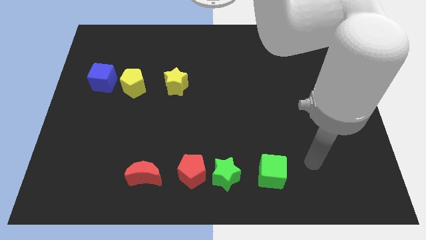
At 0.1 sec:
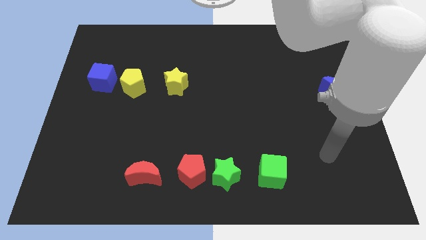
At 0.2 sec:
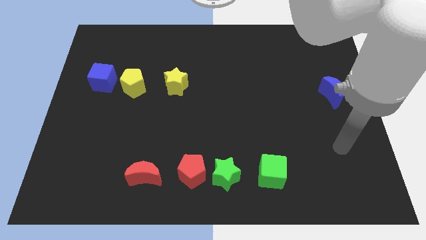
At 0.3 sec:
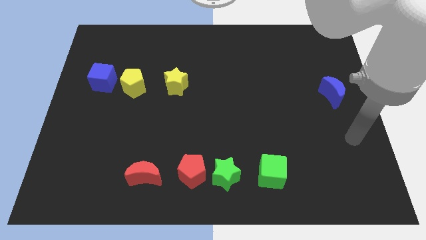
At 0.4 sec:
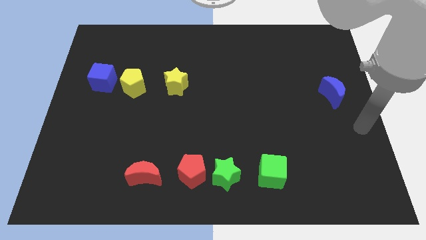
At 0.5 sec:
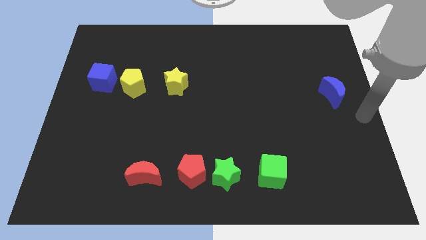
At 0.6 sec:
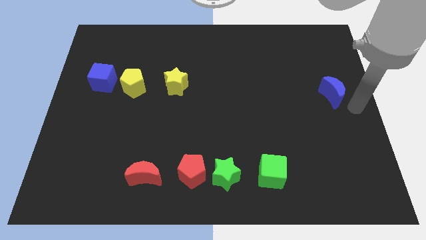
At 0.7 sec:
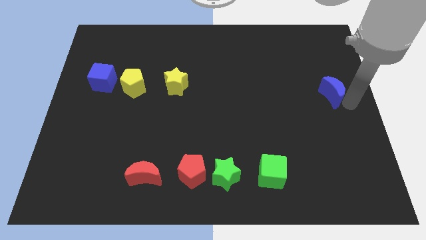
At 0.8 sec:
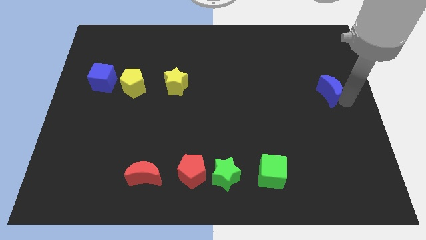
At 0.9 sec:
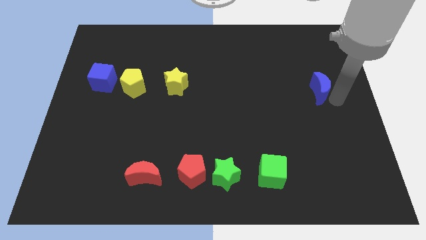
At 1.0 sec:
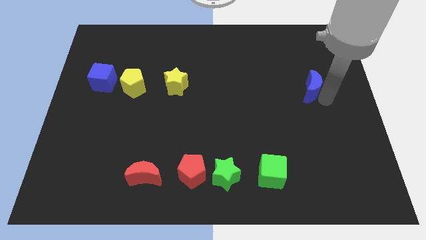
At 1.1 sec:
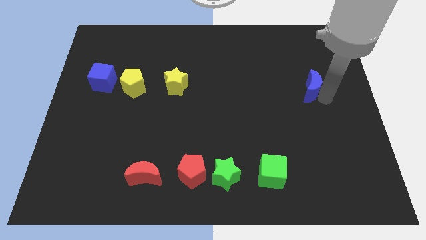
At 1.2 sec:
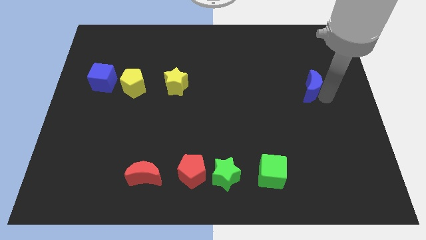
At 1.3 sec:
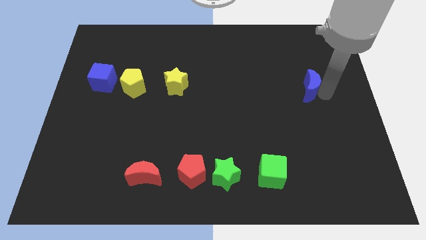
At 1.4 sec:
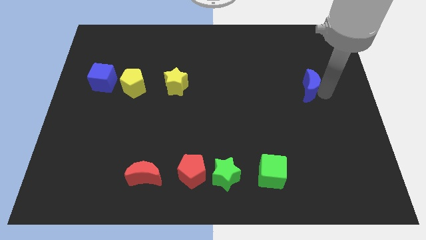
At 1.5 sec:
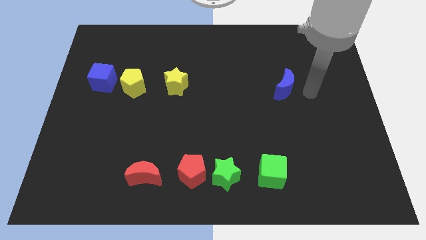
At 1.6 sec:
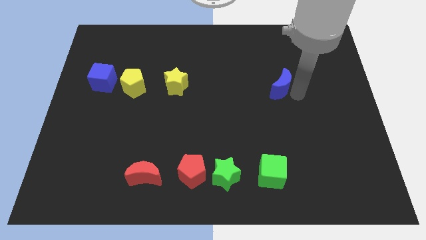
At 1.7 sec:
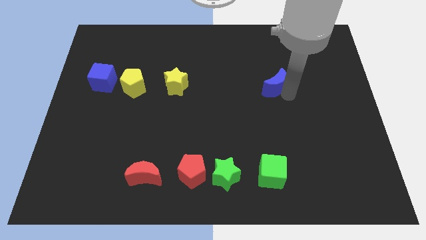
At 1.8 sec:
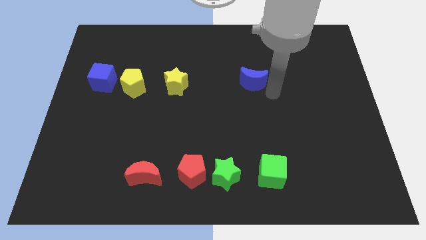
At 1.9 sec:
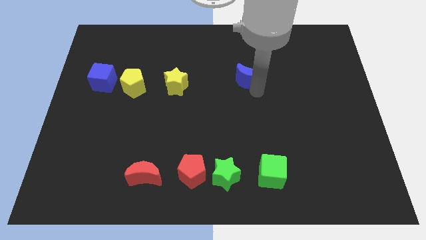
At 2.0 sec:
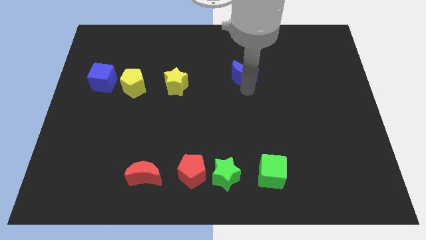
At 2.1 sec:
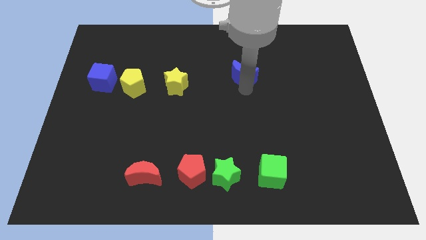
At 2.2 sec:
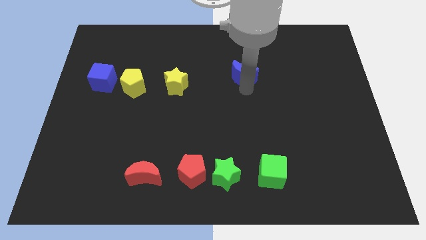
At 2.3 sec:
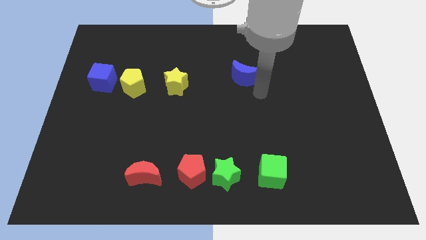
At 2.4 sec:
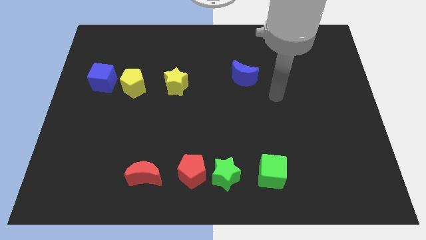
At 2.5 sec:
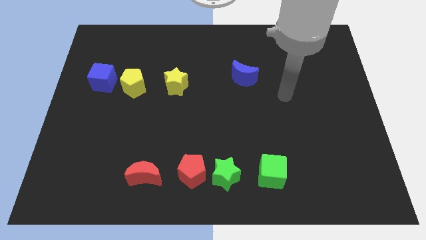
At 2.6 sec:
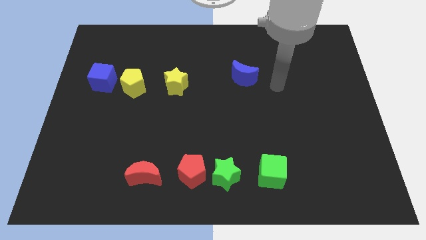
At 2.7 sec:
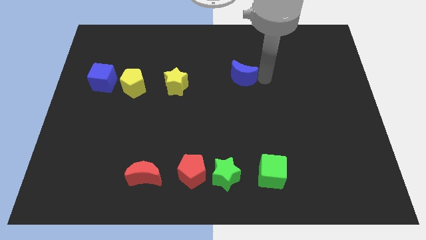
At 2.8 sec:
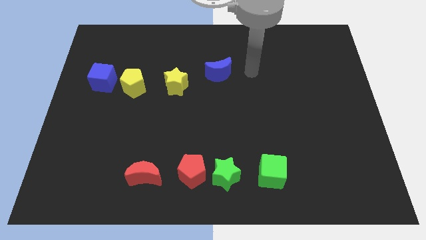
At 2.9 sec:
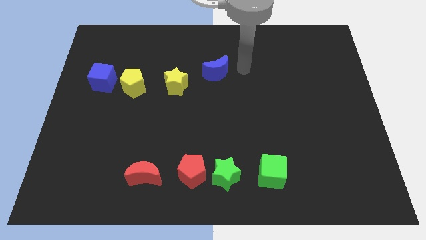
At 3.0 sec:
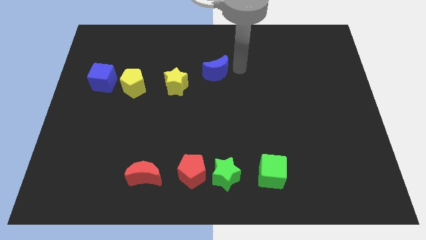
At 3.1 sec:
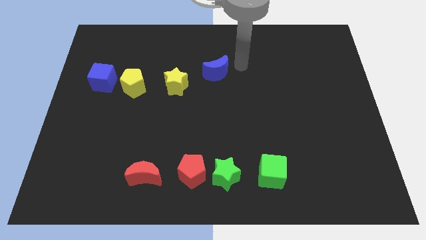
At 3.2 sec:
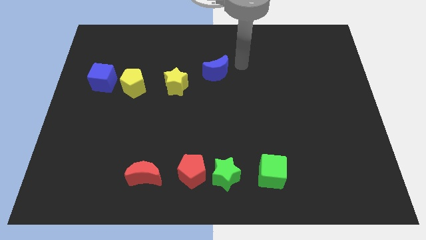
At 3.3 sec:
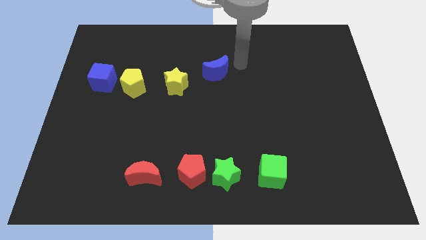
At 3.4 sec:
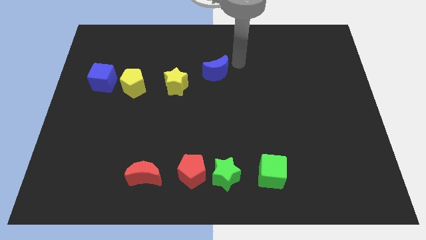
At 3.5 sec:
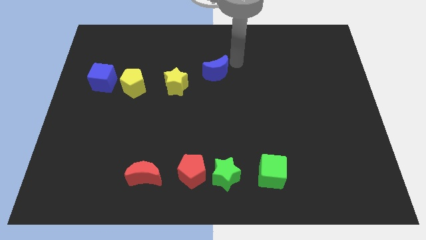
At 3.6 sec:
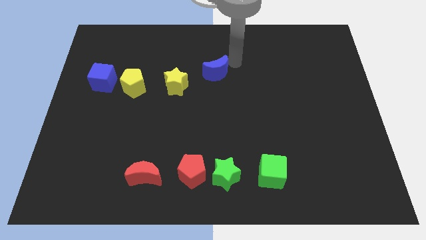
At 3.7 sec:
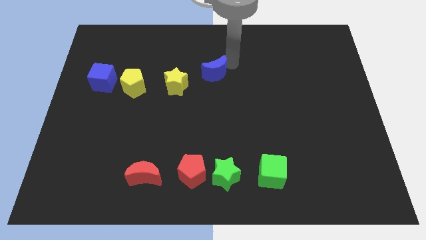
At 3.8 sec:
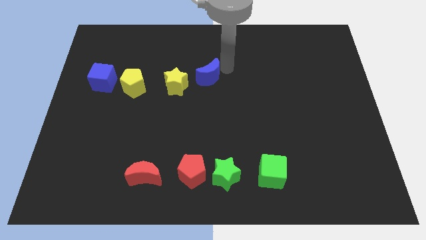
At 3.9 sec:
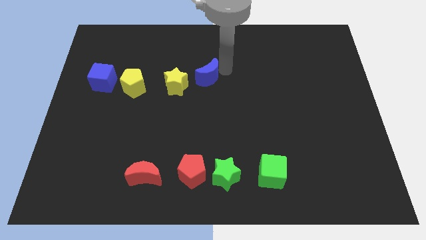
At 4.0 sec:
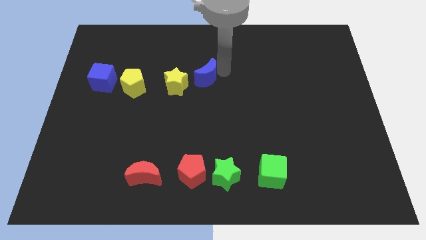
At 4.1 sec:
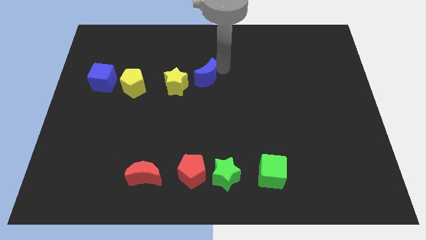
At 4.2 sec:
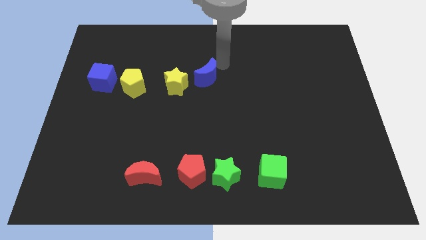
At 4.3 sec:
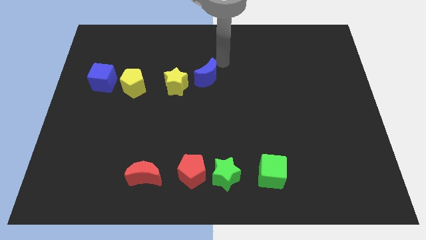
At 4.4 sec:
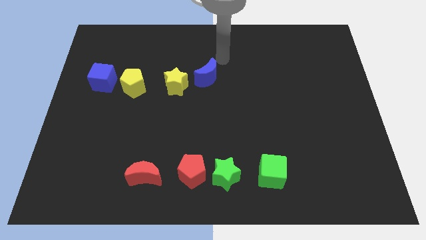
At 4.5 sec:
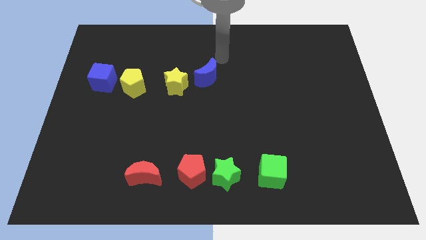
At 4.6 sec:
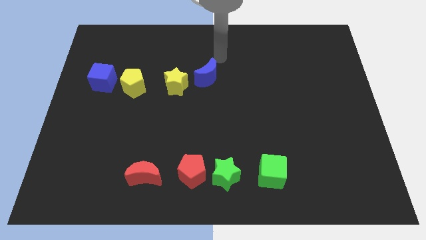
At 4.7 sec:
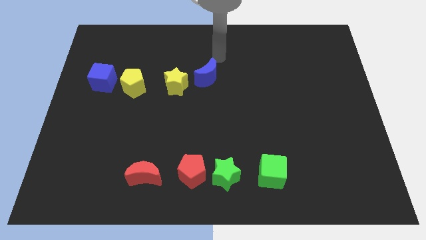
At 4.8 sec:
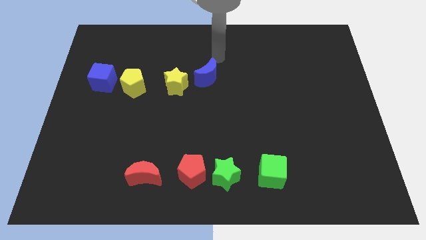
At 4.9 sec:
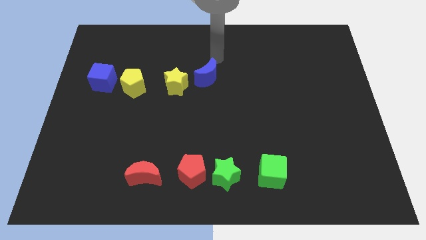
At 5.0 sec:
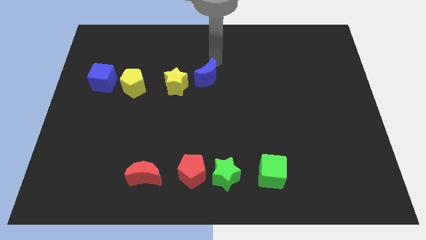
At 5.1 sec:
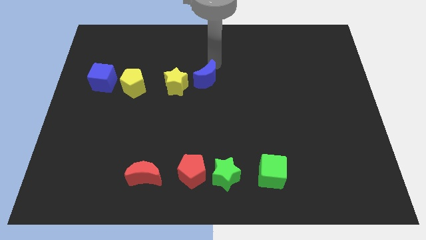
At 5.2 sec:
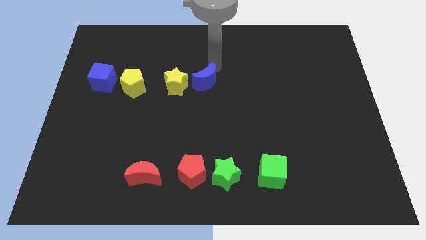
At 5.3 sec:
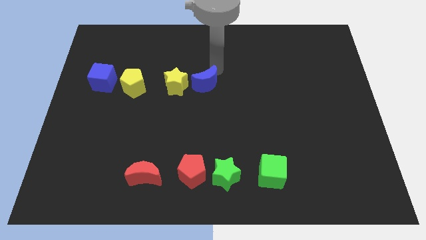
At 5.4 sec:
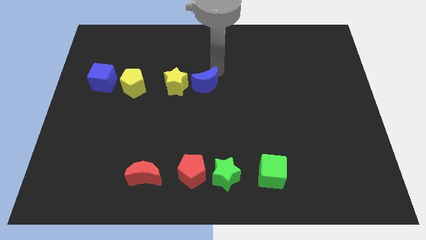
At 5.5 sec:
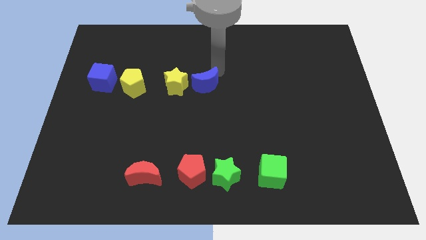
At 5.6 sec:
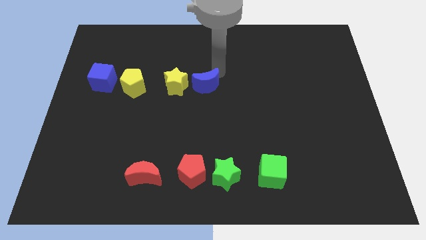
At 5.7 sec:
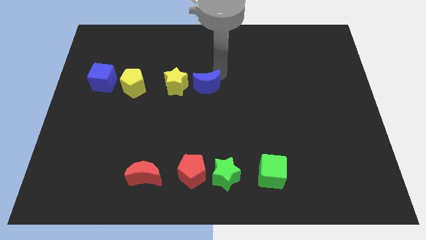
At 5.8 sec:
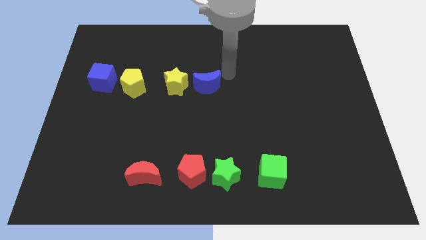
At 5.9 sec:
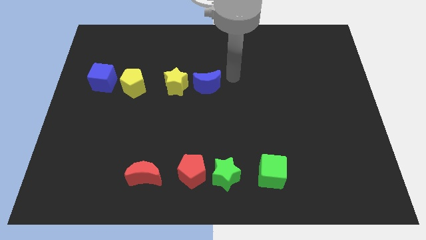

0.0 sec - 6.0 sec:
push the blue crescent towards the yellow star

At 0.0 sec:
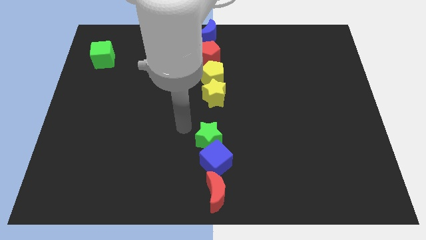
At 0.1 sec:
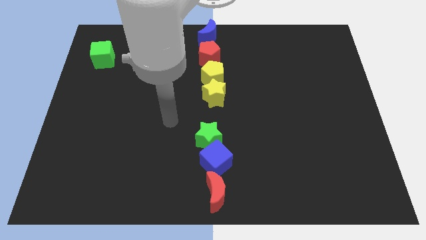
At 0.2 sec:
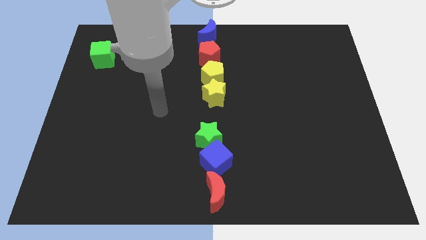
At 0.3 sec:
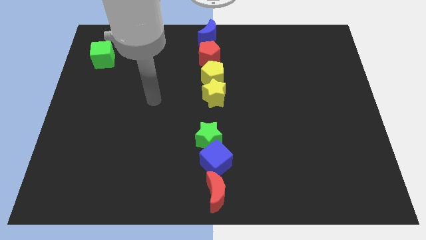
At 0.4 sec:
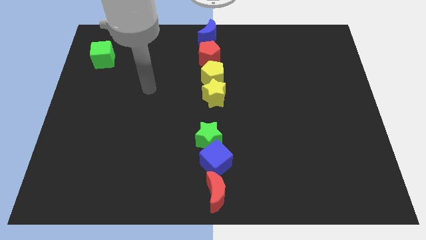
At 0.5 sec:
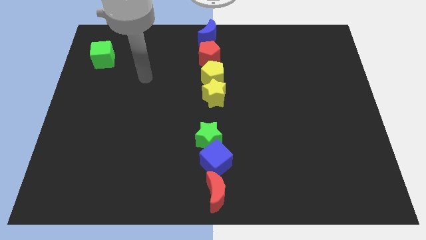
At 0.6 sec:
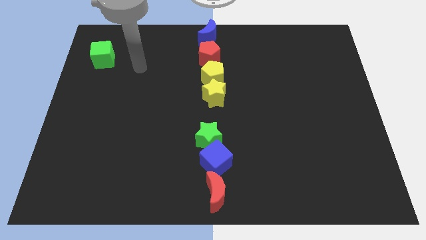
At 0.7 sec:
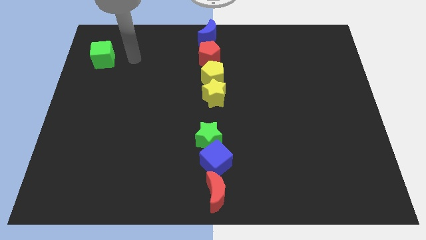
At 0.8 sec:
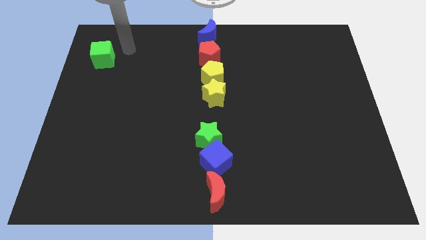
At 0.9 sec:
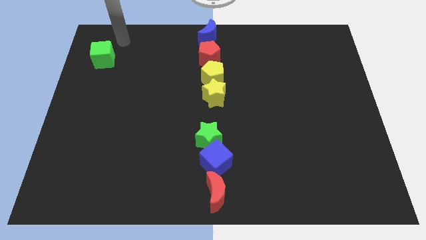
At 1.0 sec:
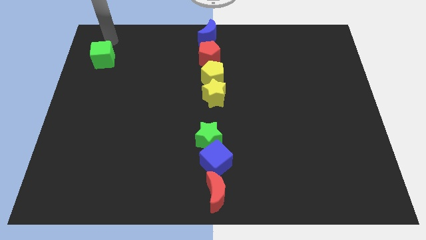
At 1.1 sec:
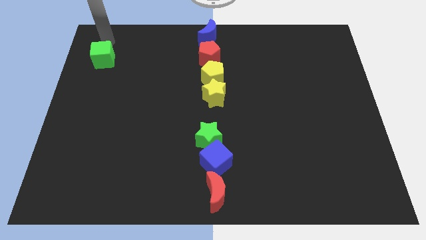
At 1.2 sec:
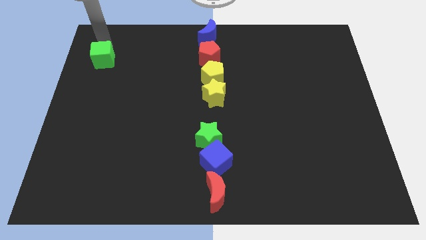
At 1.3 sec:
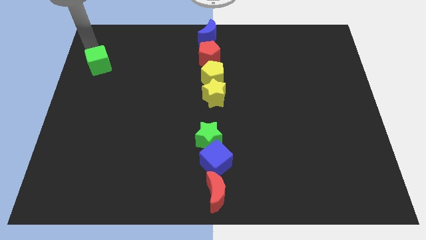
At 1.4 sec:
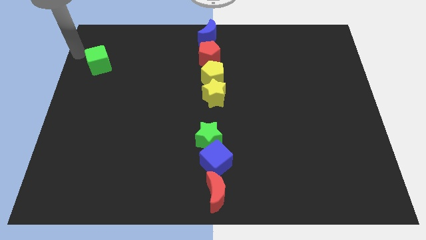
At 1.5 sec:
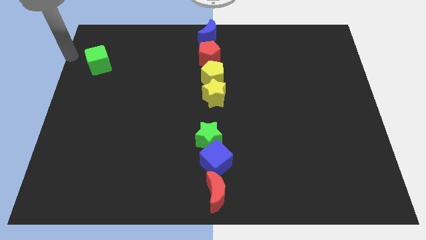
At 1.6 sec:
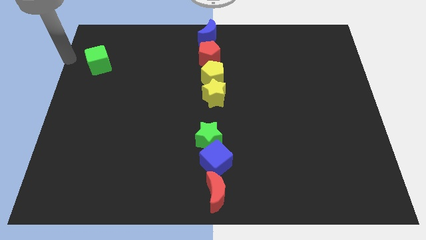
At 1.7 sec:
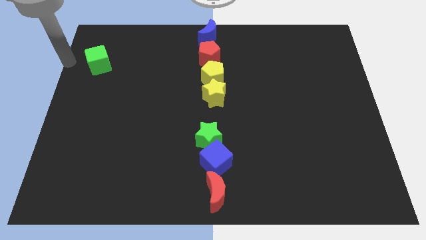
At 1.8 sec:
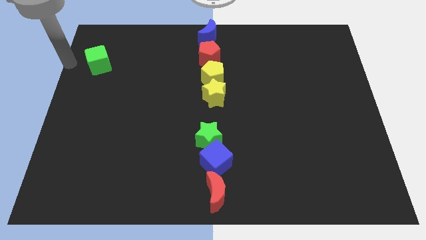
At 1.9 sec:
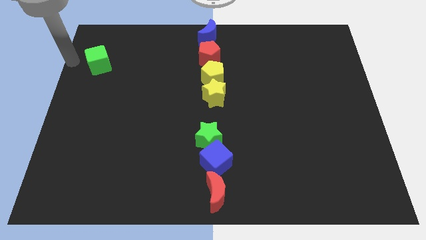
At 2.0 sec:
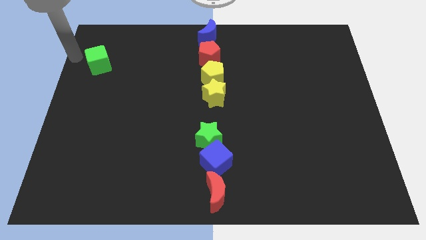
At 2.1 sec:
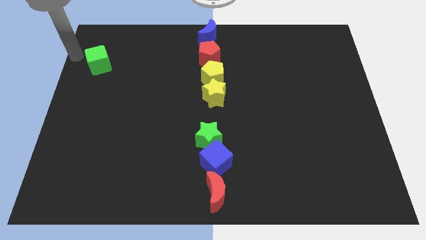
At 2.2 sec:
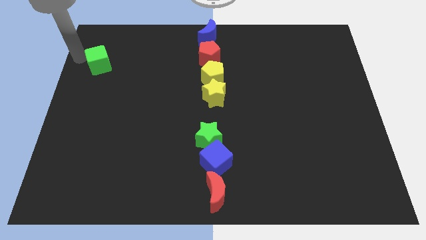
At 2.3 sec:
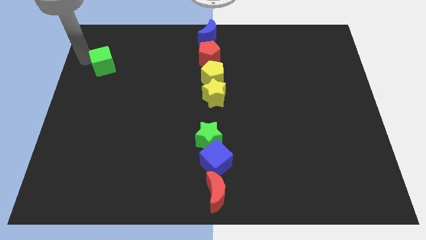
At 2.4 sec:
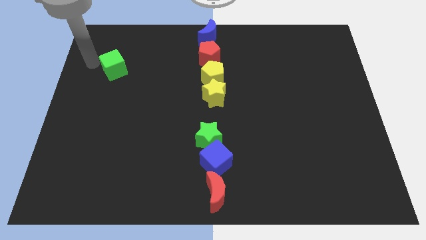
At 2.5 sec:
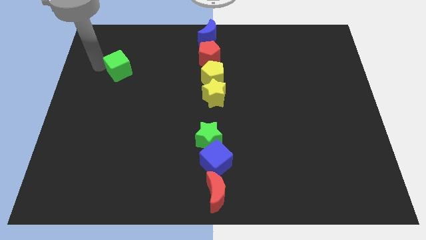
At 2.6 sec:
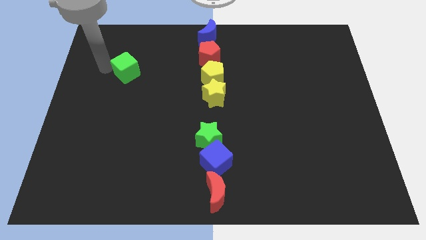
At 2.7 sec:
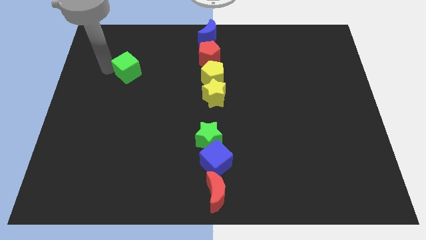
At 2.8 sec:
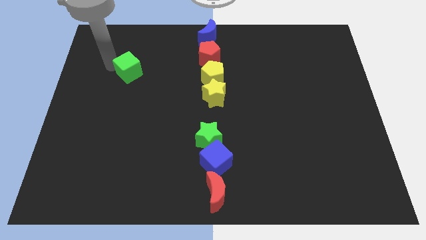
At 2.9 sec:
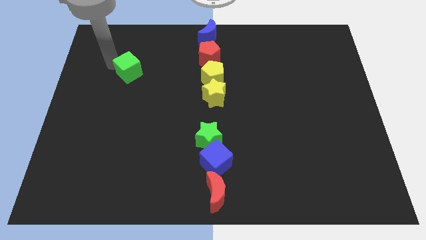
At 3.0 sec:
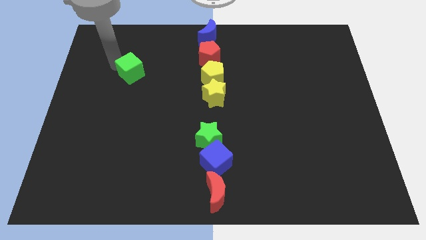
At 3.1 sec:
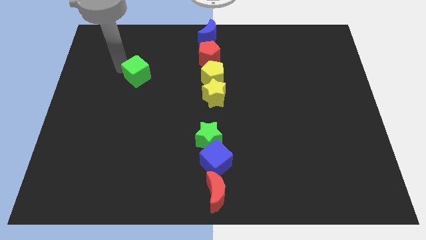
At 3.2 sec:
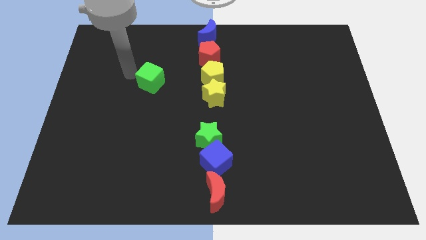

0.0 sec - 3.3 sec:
put the green cube horizontally to the left side of the yellow pentagon
